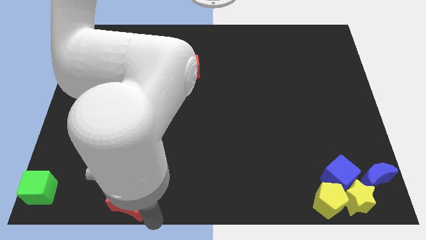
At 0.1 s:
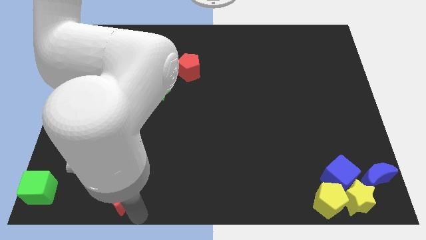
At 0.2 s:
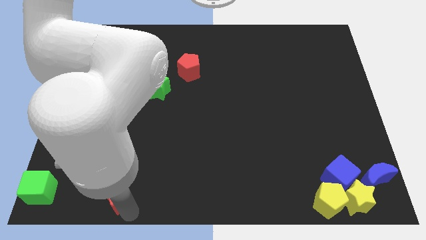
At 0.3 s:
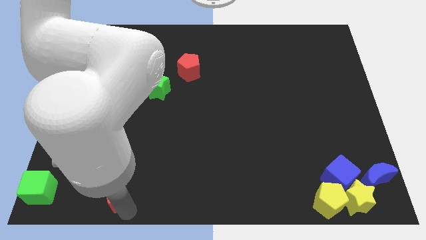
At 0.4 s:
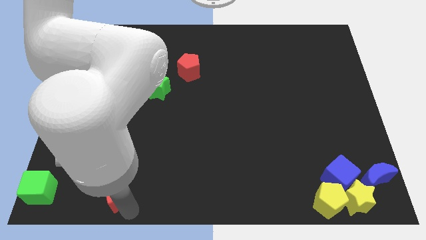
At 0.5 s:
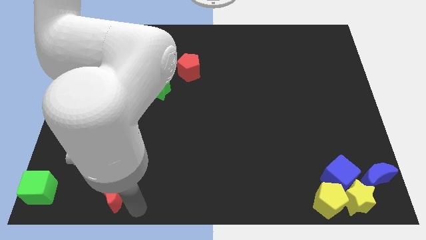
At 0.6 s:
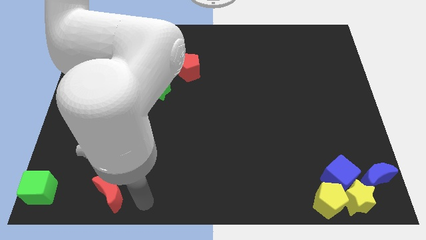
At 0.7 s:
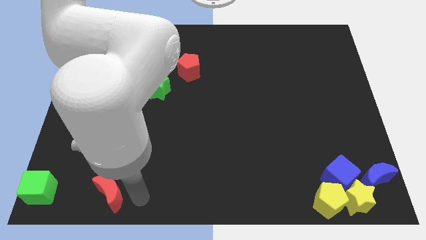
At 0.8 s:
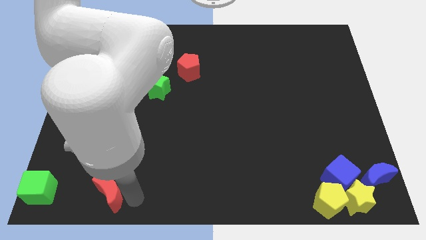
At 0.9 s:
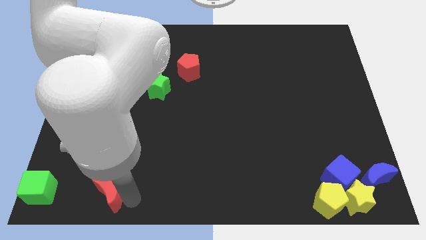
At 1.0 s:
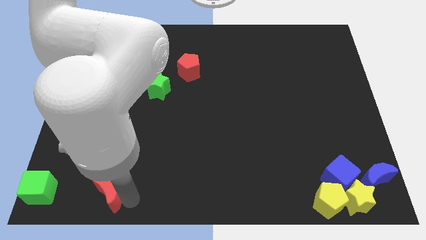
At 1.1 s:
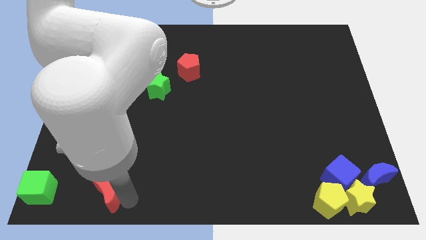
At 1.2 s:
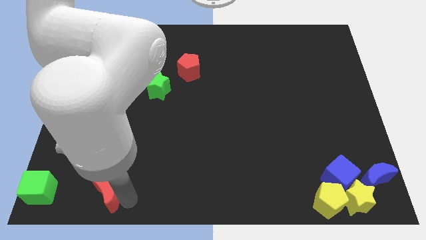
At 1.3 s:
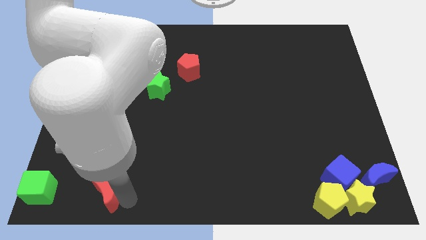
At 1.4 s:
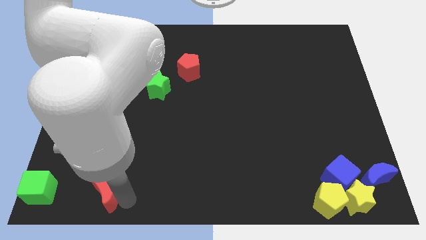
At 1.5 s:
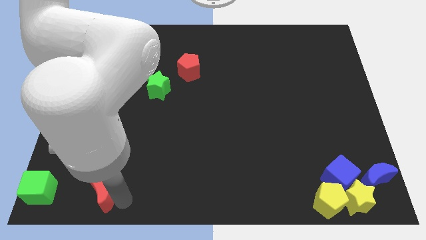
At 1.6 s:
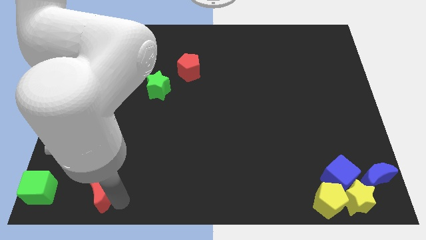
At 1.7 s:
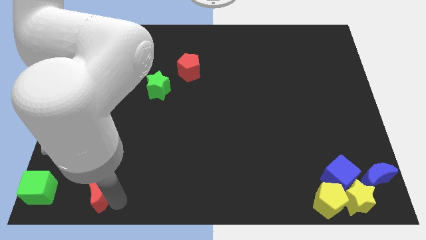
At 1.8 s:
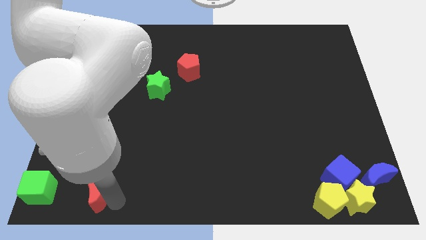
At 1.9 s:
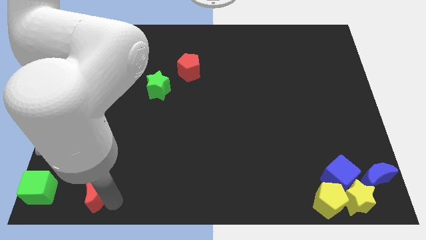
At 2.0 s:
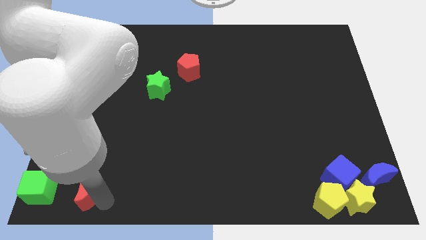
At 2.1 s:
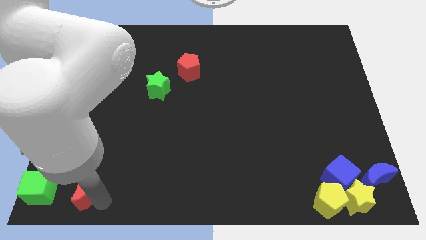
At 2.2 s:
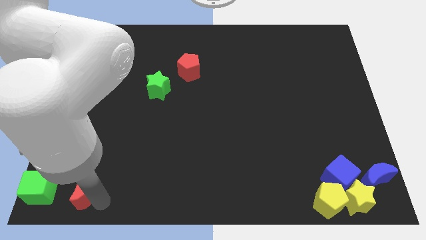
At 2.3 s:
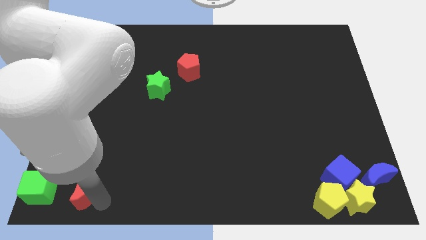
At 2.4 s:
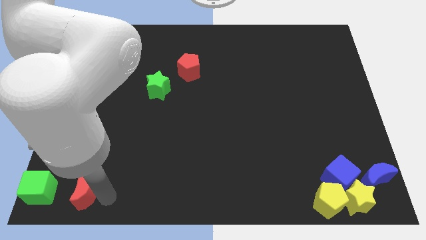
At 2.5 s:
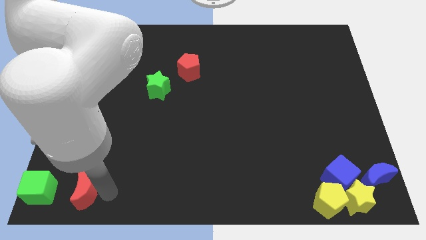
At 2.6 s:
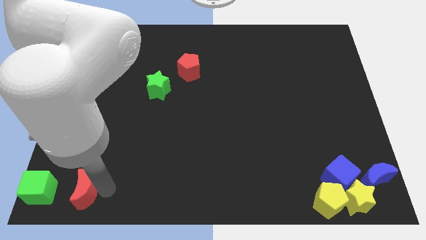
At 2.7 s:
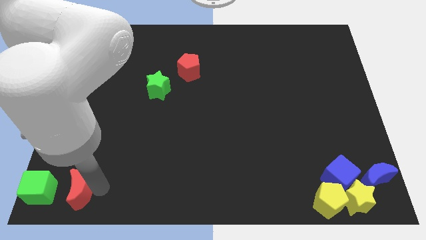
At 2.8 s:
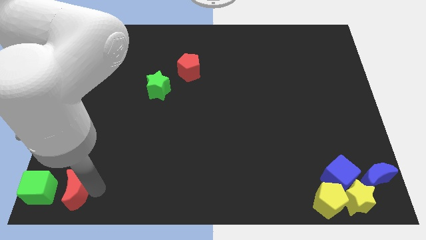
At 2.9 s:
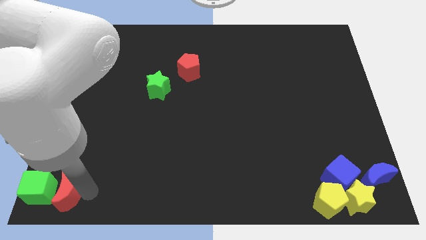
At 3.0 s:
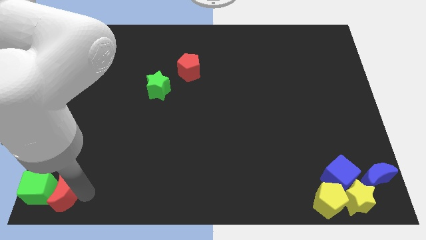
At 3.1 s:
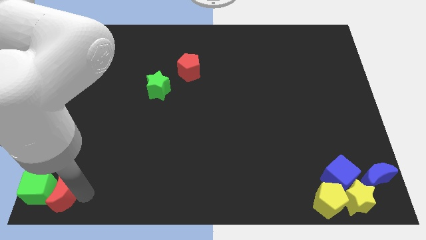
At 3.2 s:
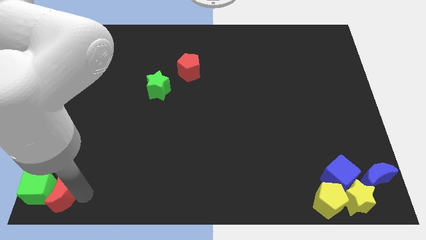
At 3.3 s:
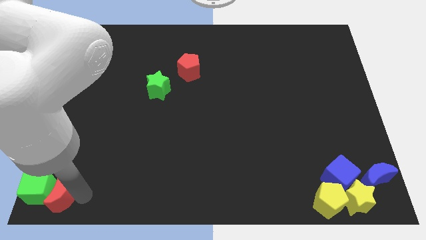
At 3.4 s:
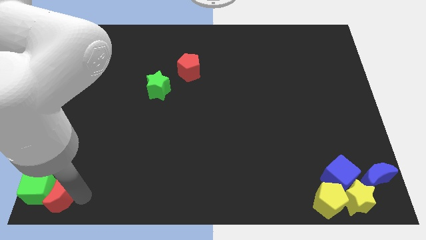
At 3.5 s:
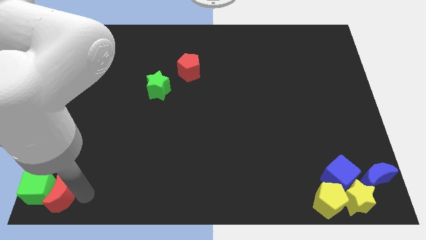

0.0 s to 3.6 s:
move red moon in to green cube

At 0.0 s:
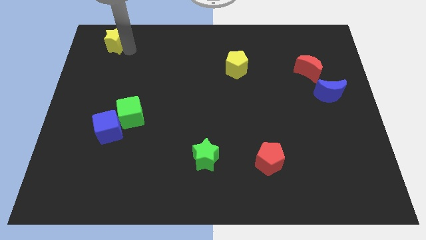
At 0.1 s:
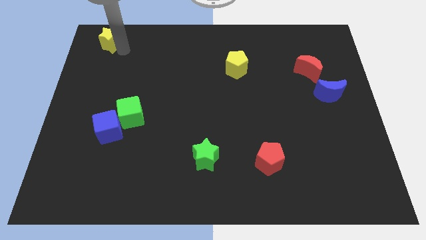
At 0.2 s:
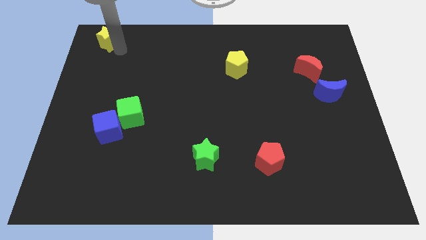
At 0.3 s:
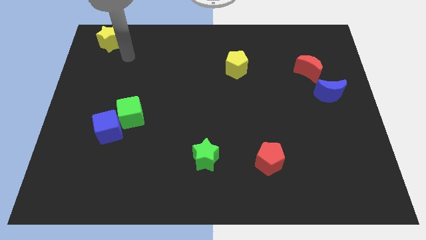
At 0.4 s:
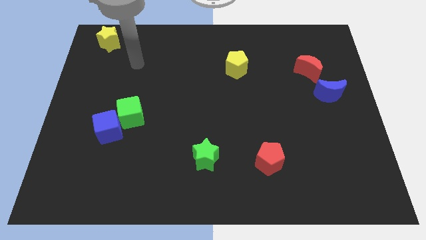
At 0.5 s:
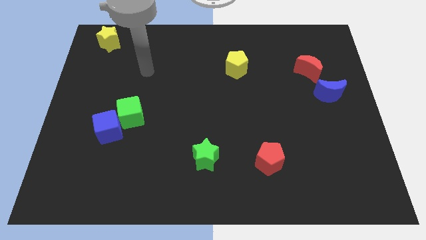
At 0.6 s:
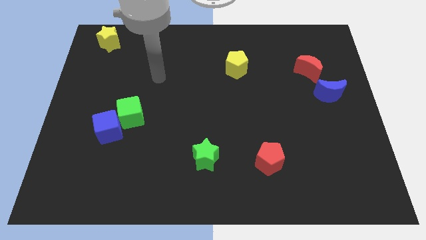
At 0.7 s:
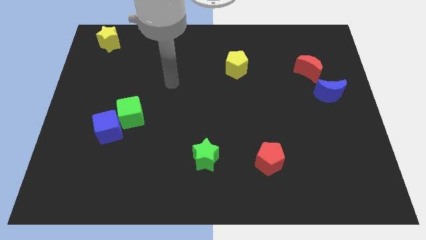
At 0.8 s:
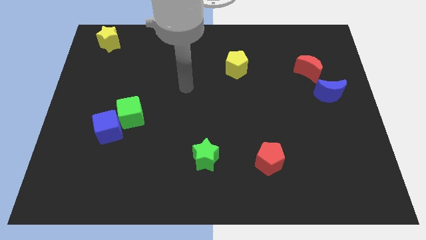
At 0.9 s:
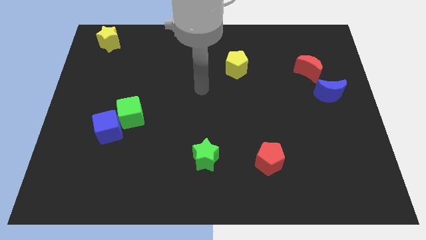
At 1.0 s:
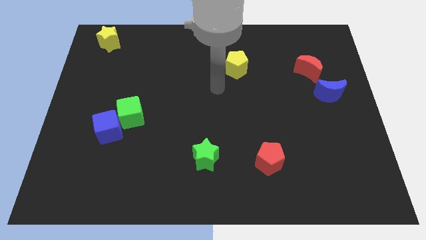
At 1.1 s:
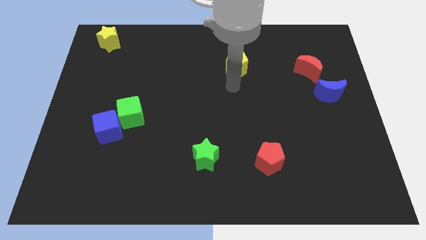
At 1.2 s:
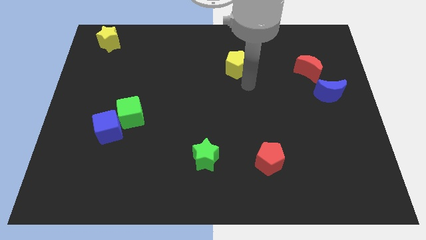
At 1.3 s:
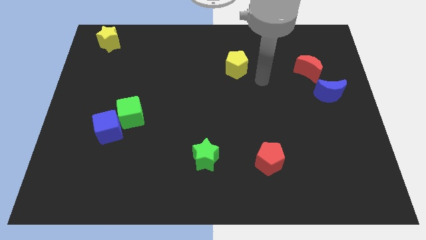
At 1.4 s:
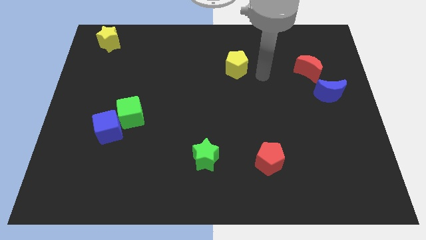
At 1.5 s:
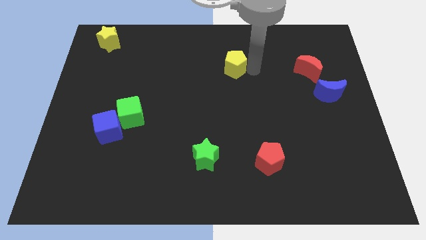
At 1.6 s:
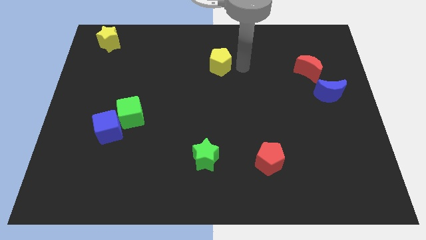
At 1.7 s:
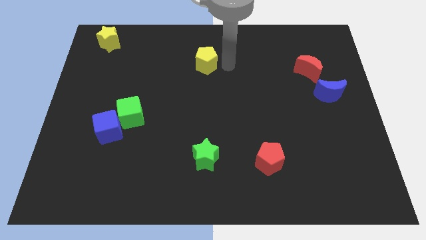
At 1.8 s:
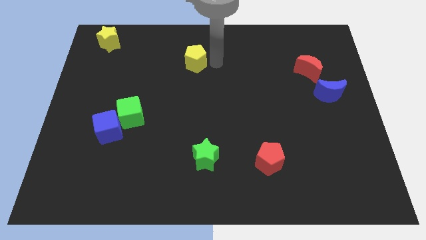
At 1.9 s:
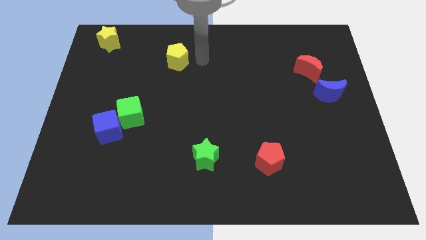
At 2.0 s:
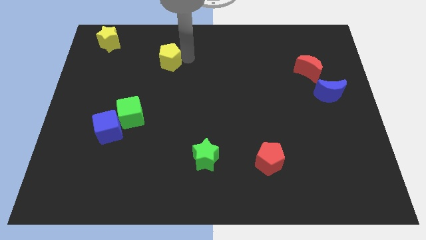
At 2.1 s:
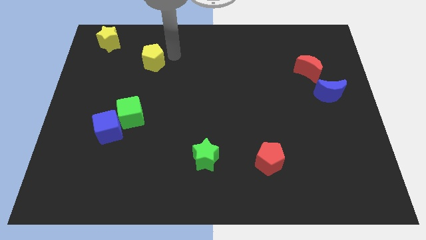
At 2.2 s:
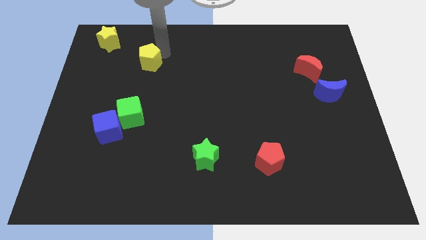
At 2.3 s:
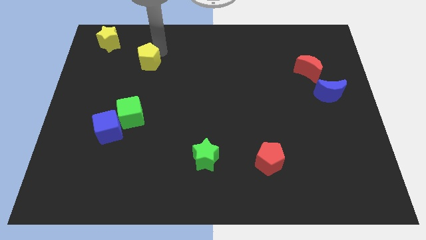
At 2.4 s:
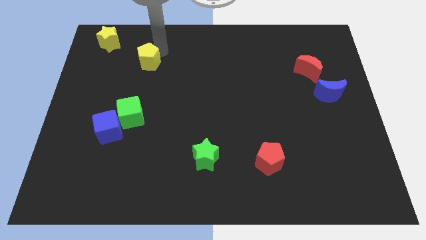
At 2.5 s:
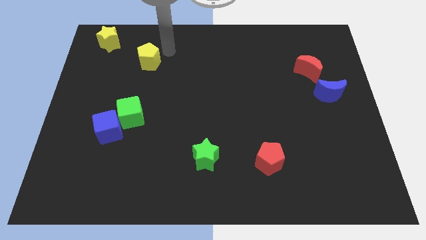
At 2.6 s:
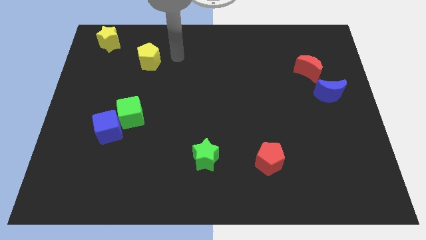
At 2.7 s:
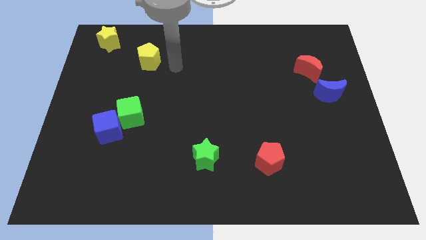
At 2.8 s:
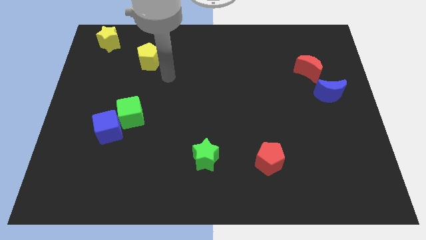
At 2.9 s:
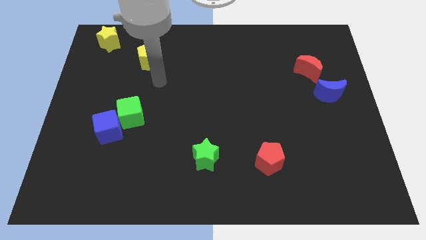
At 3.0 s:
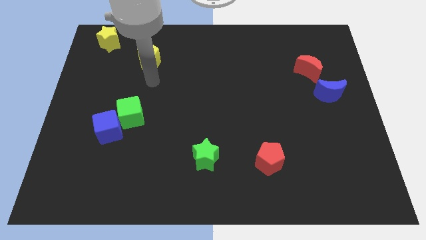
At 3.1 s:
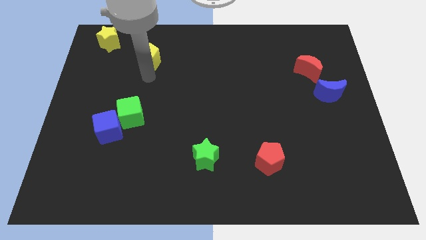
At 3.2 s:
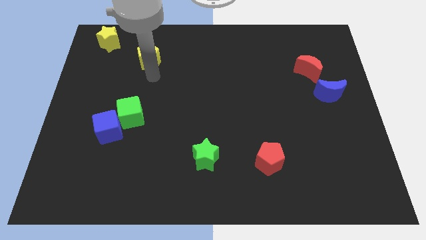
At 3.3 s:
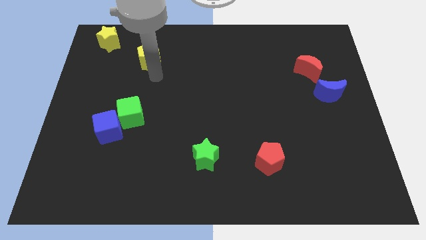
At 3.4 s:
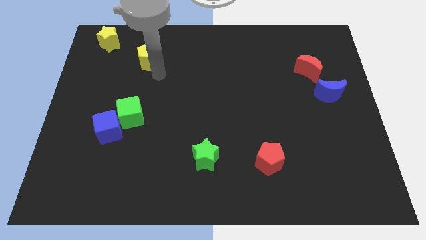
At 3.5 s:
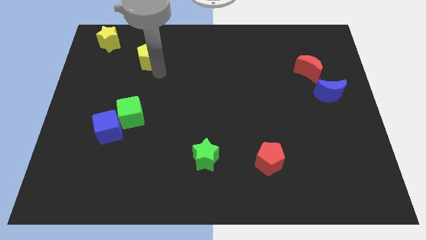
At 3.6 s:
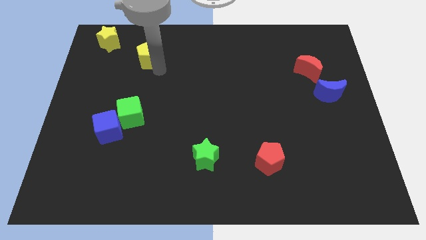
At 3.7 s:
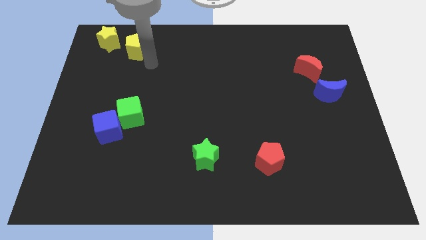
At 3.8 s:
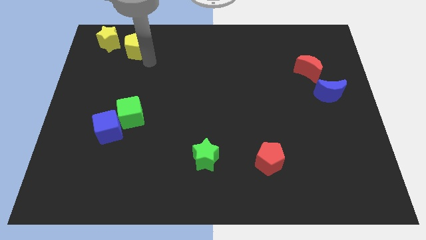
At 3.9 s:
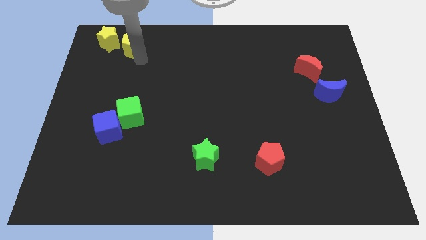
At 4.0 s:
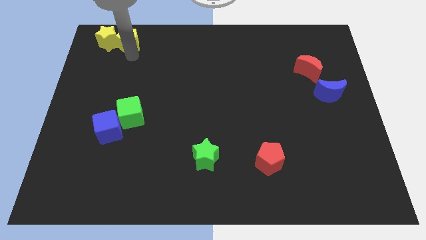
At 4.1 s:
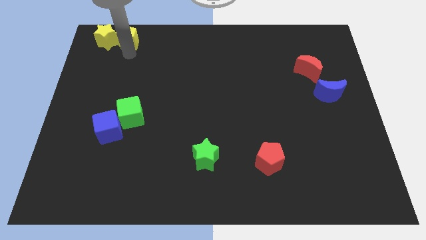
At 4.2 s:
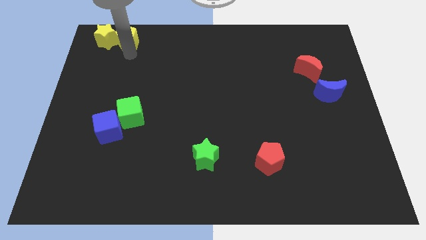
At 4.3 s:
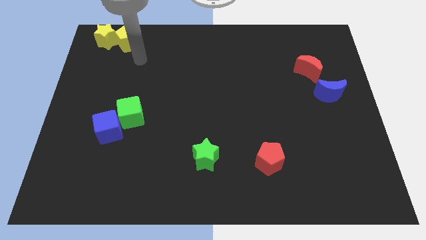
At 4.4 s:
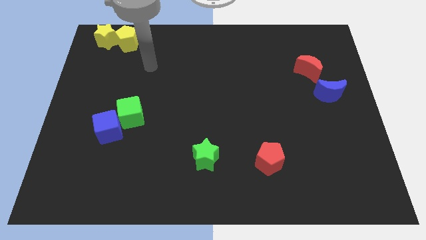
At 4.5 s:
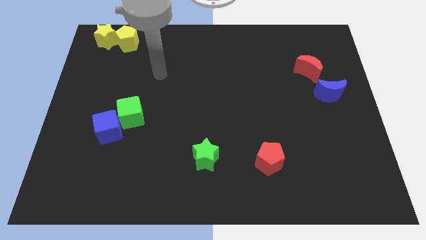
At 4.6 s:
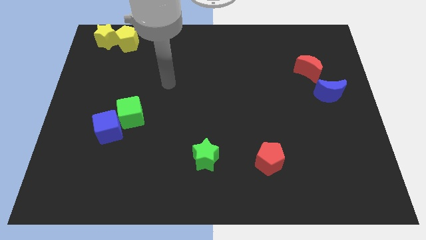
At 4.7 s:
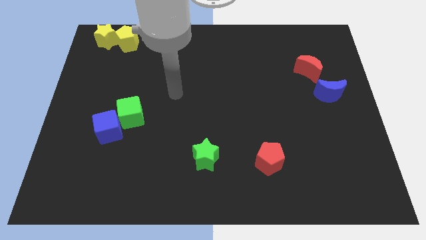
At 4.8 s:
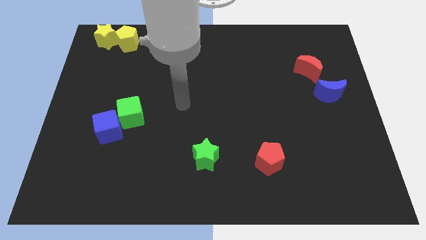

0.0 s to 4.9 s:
push the yellow pentagon into the yellow star
